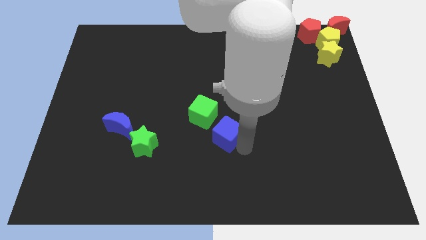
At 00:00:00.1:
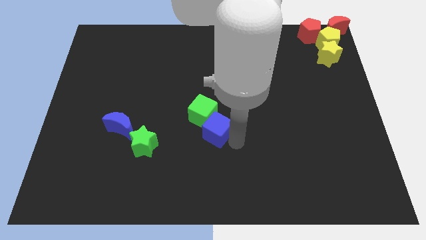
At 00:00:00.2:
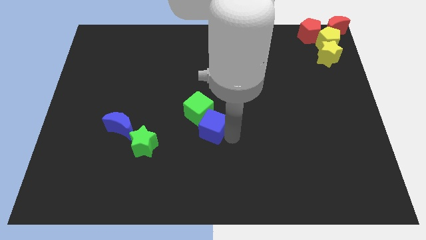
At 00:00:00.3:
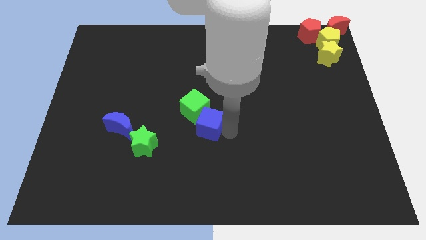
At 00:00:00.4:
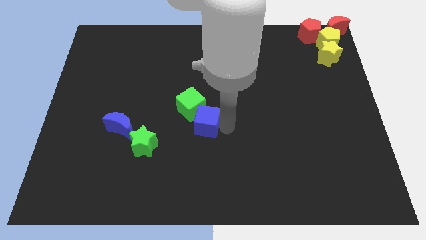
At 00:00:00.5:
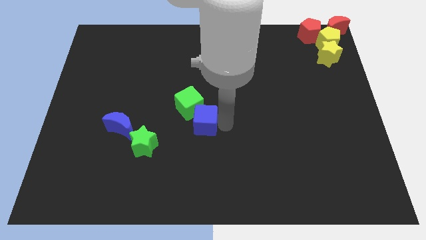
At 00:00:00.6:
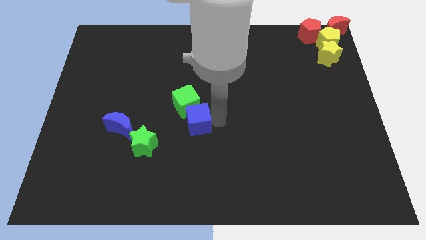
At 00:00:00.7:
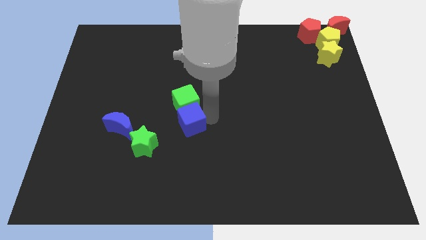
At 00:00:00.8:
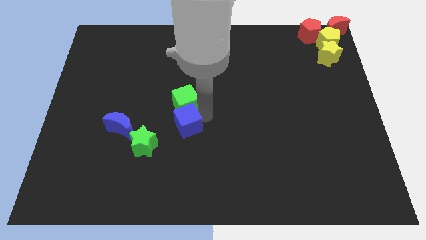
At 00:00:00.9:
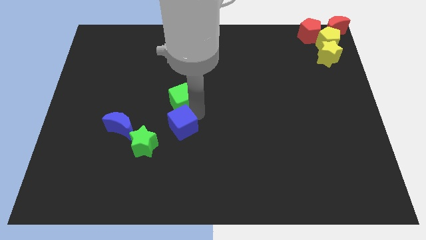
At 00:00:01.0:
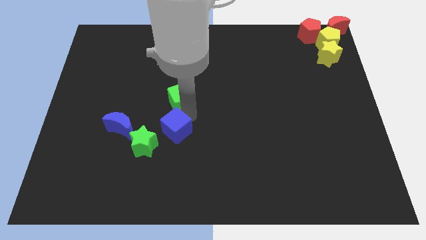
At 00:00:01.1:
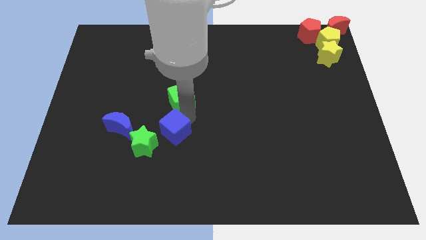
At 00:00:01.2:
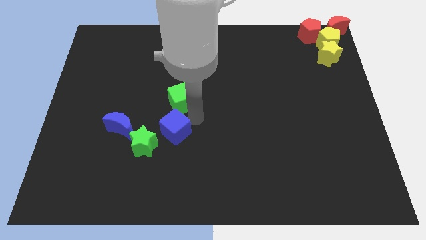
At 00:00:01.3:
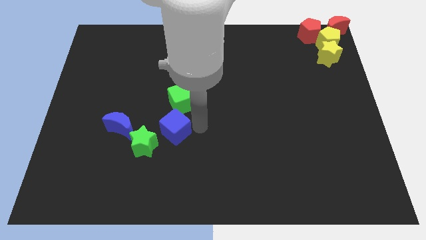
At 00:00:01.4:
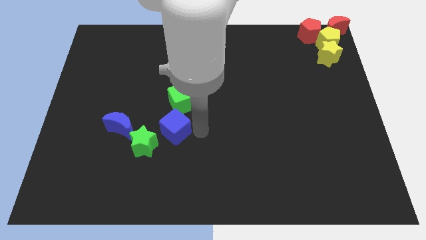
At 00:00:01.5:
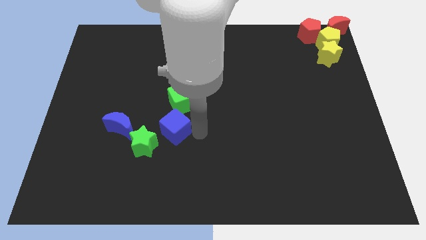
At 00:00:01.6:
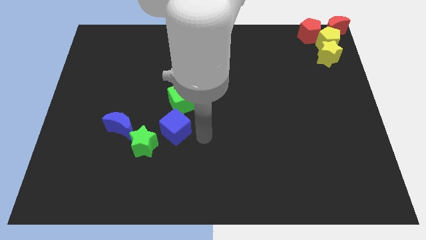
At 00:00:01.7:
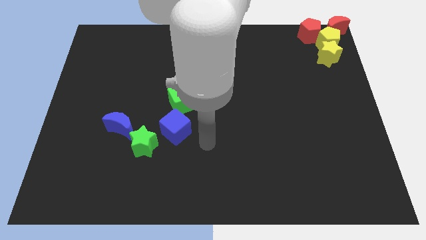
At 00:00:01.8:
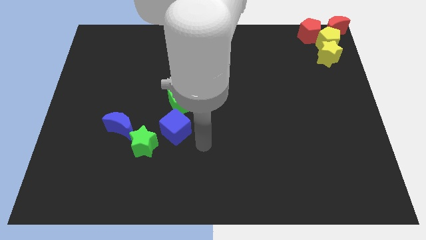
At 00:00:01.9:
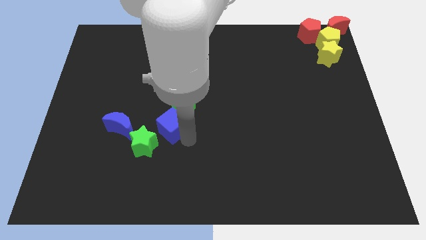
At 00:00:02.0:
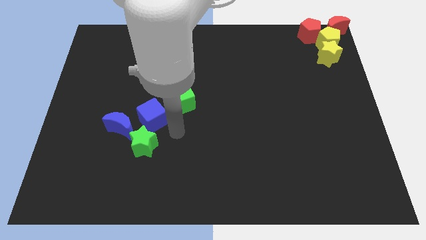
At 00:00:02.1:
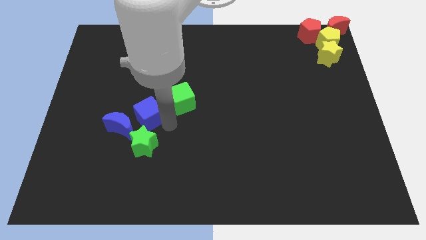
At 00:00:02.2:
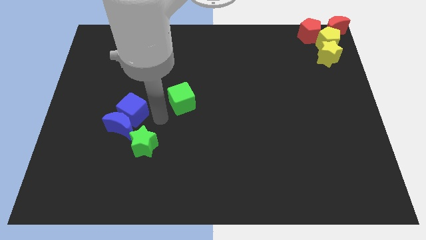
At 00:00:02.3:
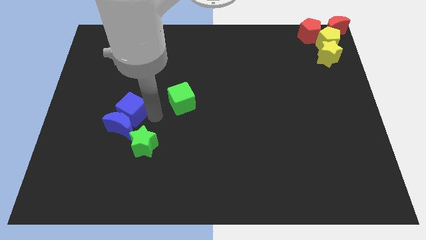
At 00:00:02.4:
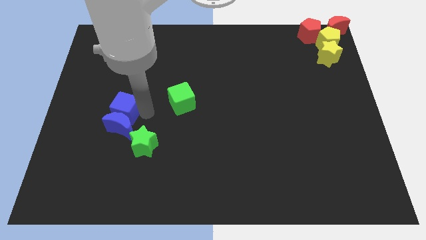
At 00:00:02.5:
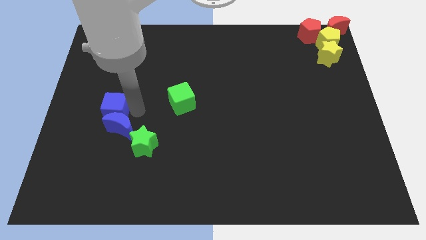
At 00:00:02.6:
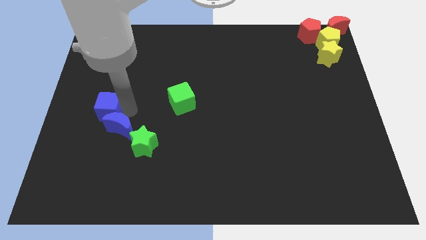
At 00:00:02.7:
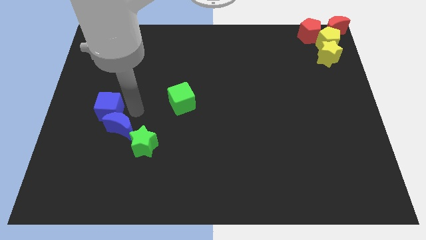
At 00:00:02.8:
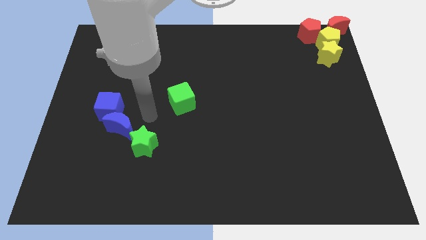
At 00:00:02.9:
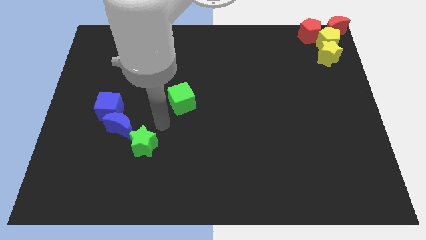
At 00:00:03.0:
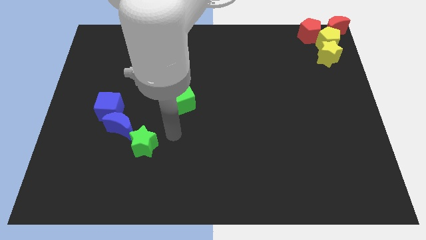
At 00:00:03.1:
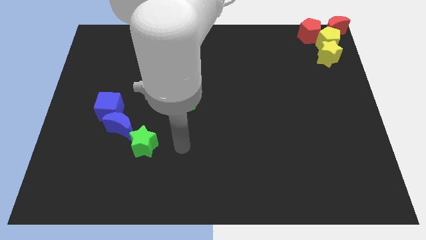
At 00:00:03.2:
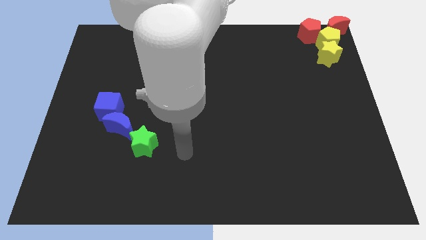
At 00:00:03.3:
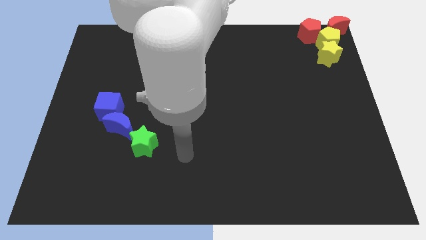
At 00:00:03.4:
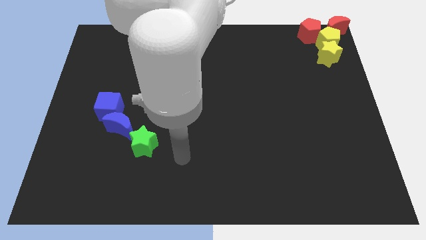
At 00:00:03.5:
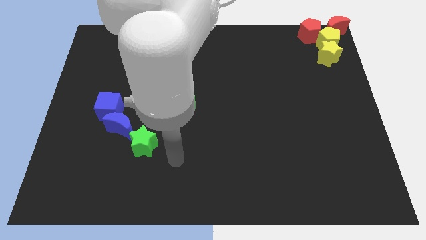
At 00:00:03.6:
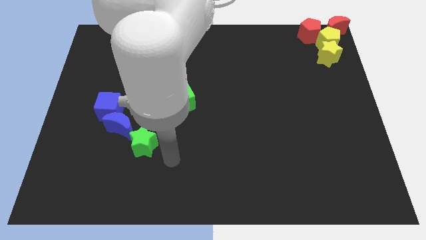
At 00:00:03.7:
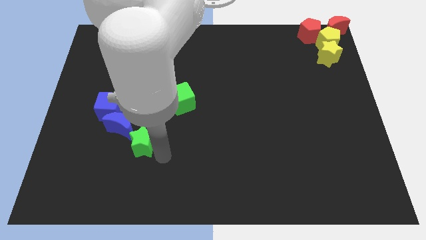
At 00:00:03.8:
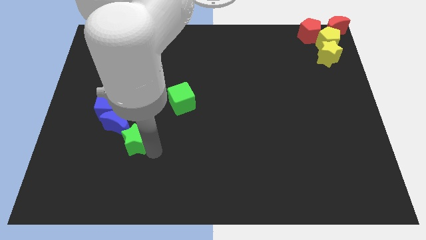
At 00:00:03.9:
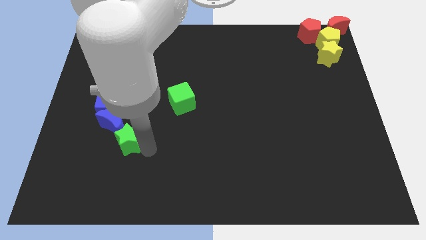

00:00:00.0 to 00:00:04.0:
put the blue cube on the top of the blue moon

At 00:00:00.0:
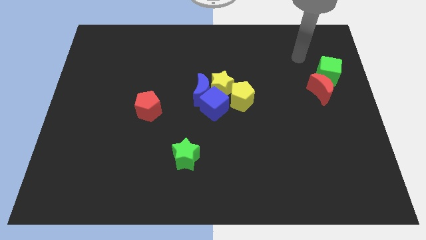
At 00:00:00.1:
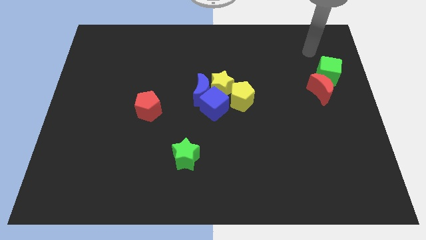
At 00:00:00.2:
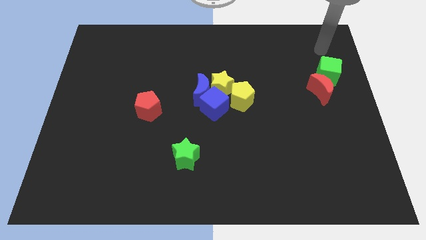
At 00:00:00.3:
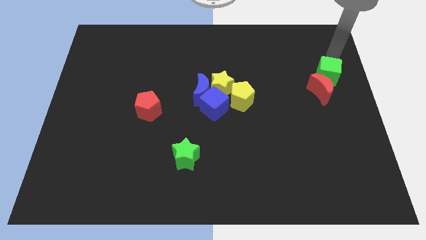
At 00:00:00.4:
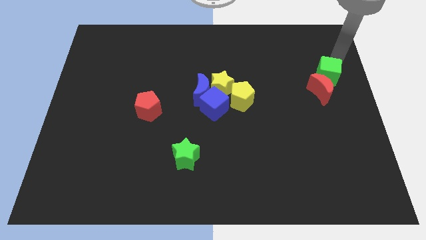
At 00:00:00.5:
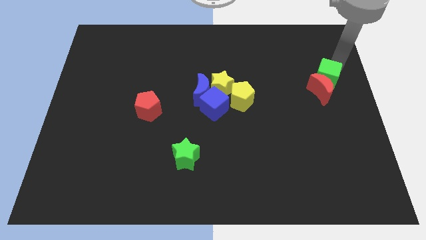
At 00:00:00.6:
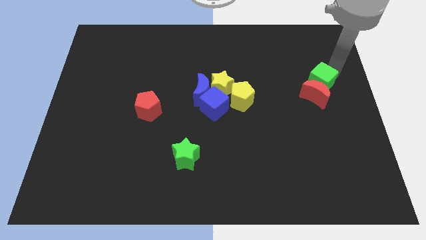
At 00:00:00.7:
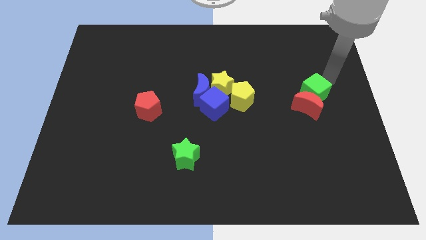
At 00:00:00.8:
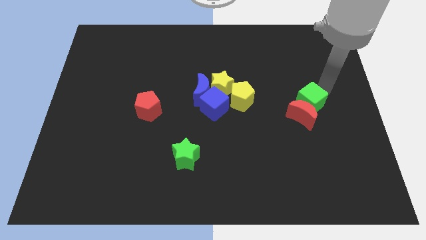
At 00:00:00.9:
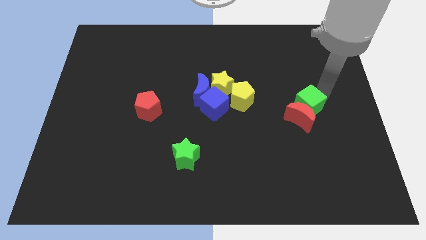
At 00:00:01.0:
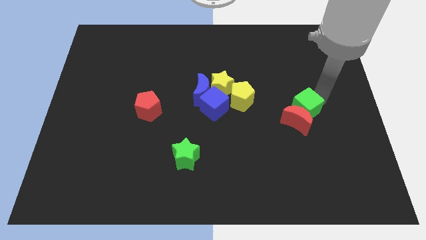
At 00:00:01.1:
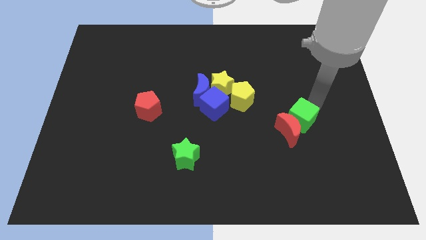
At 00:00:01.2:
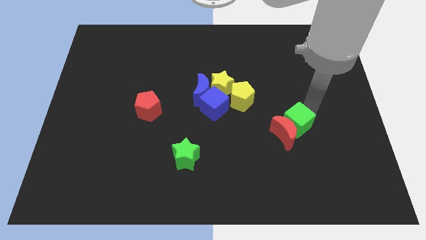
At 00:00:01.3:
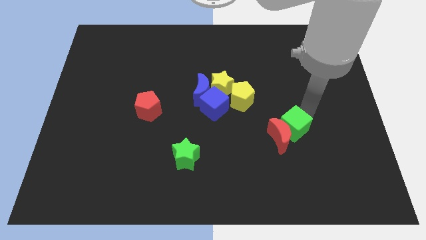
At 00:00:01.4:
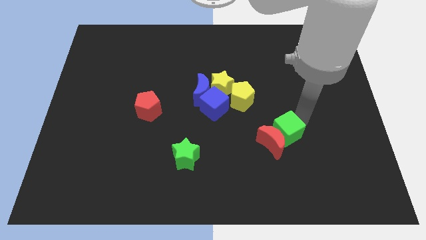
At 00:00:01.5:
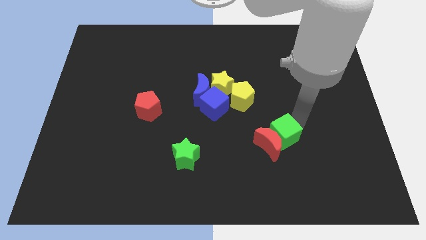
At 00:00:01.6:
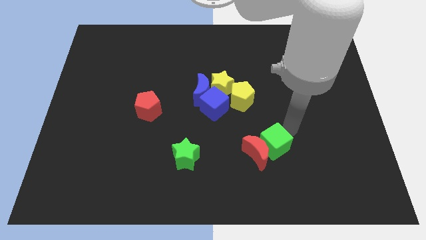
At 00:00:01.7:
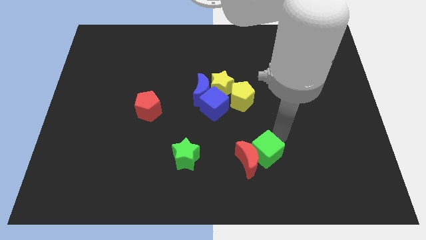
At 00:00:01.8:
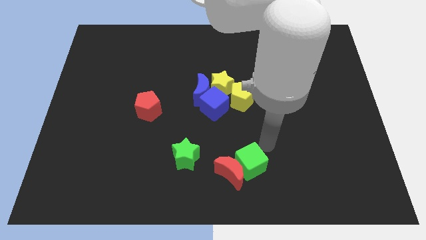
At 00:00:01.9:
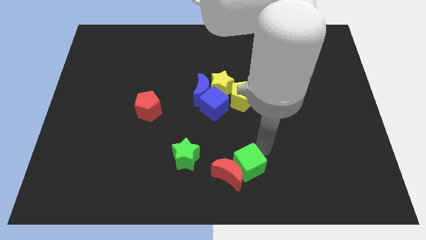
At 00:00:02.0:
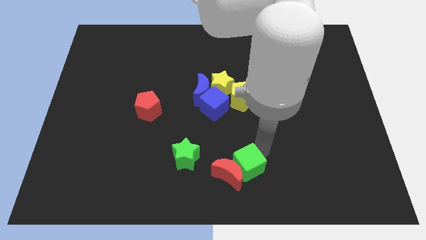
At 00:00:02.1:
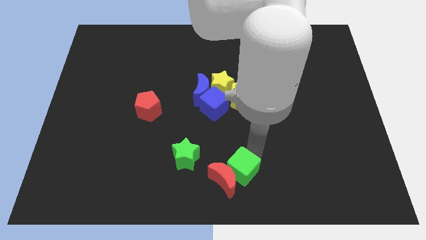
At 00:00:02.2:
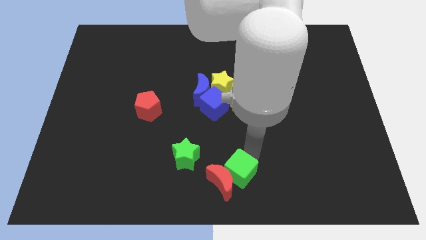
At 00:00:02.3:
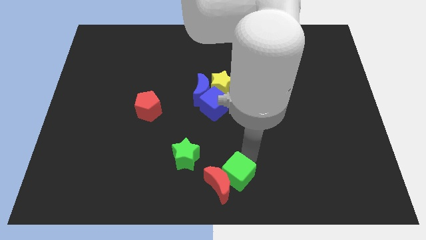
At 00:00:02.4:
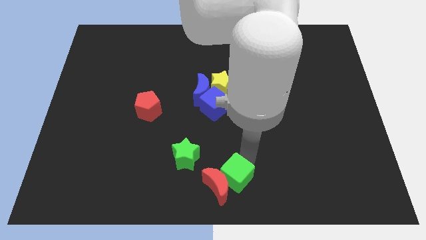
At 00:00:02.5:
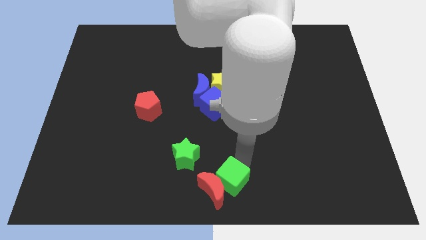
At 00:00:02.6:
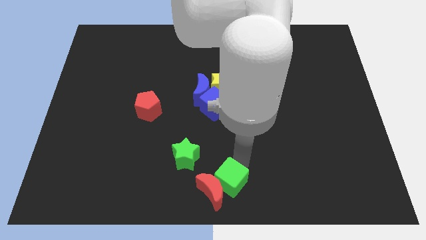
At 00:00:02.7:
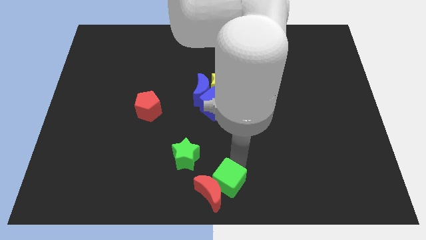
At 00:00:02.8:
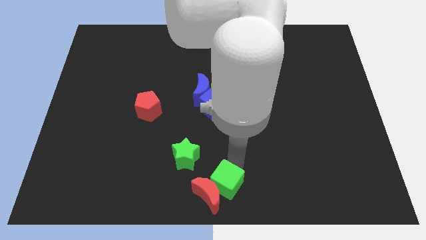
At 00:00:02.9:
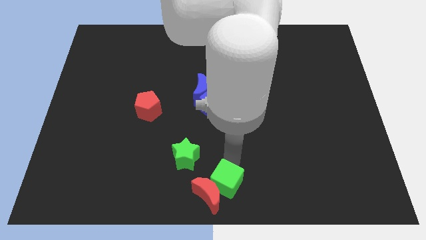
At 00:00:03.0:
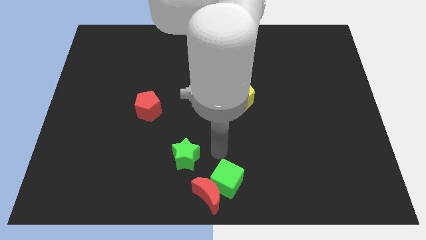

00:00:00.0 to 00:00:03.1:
push the green cube towards the bottom center along with the red crescent

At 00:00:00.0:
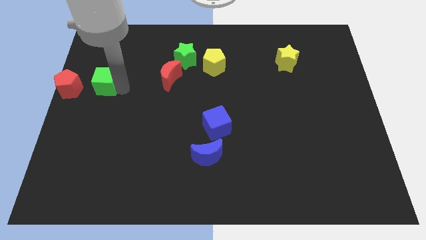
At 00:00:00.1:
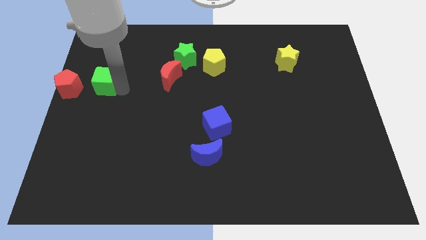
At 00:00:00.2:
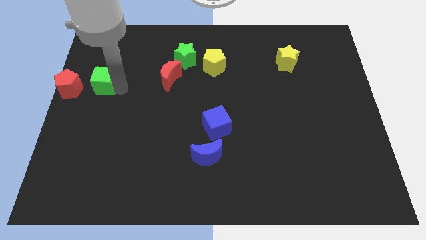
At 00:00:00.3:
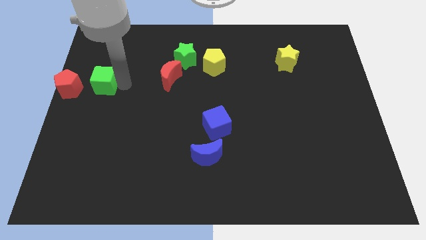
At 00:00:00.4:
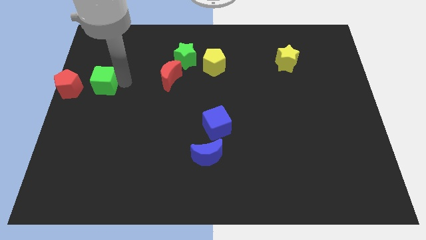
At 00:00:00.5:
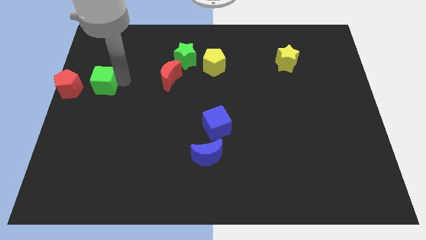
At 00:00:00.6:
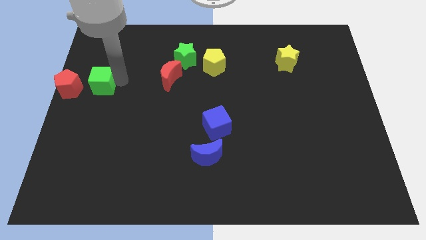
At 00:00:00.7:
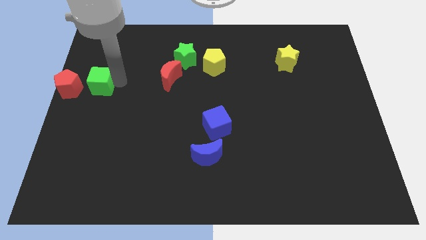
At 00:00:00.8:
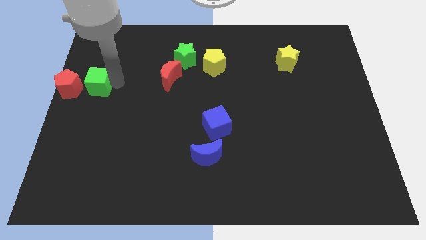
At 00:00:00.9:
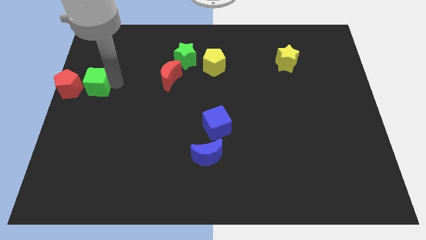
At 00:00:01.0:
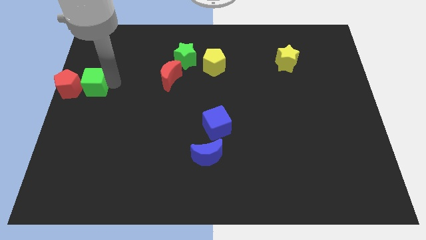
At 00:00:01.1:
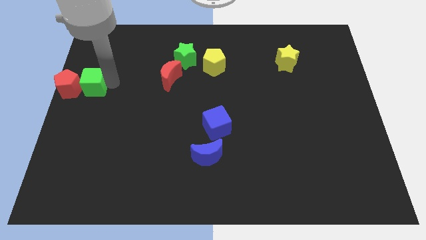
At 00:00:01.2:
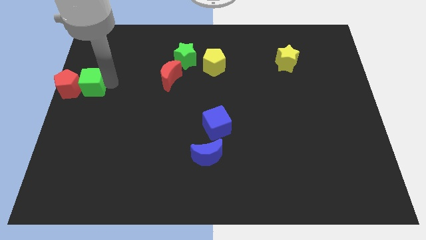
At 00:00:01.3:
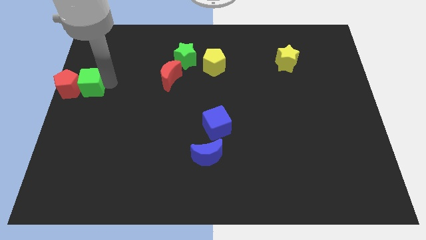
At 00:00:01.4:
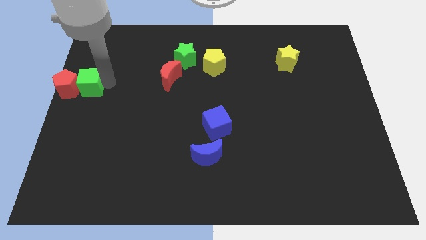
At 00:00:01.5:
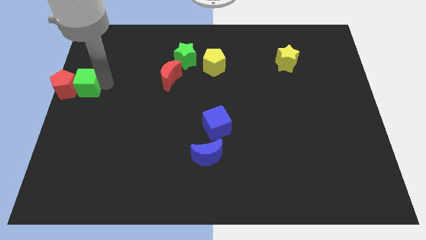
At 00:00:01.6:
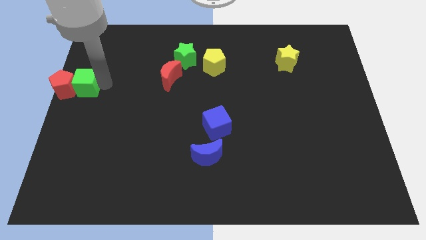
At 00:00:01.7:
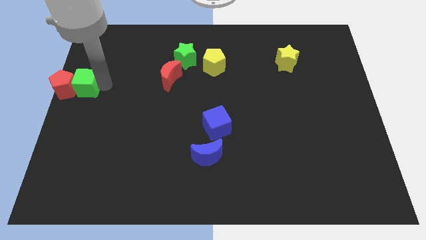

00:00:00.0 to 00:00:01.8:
push the green cube into the red pentagon
